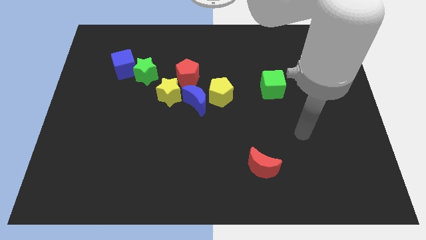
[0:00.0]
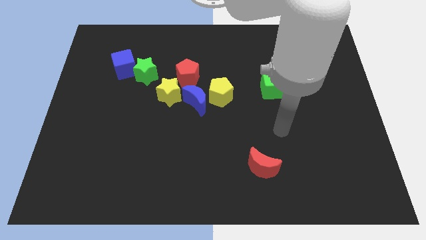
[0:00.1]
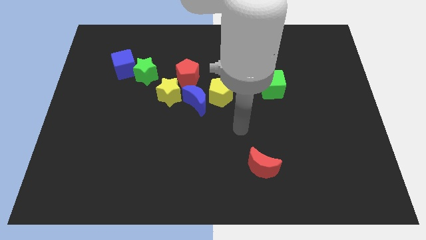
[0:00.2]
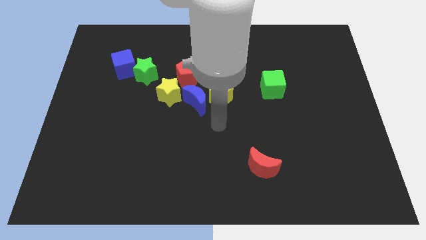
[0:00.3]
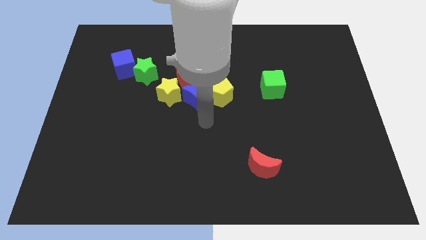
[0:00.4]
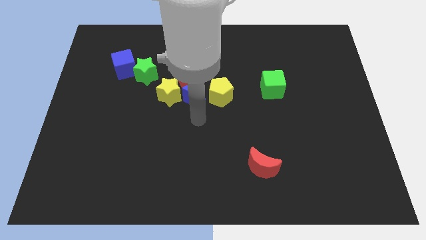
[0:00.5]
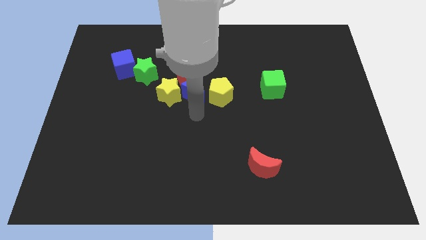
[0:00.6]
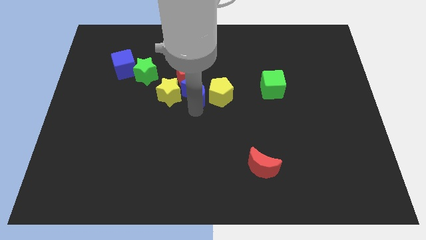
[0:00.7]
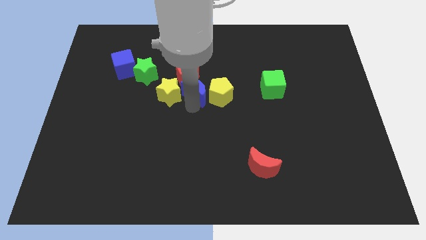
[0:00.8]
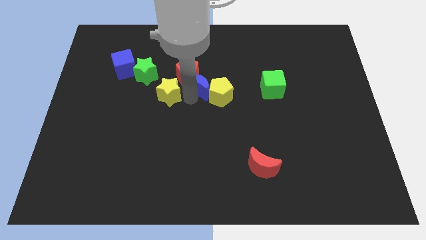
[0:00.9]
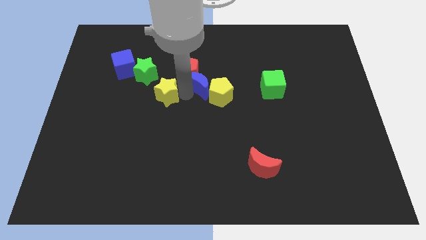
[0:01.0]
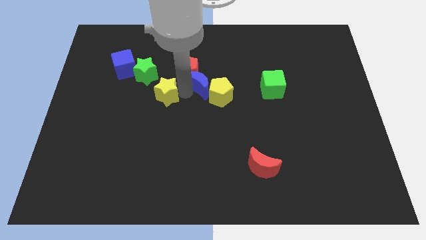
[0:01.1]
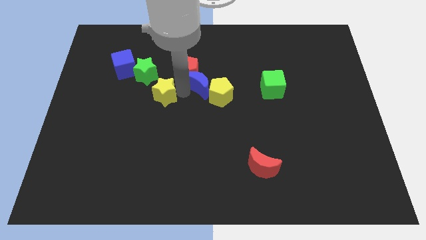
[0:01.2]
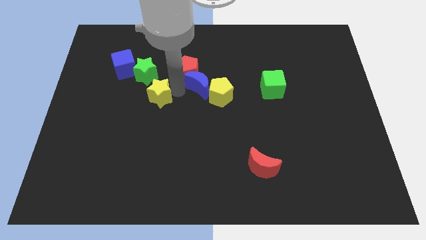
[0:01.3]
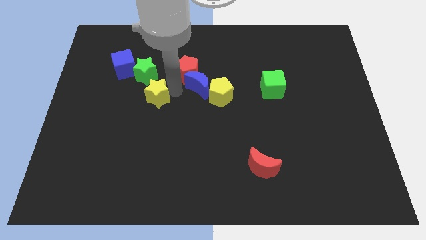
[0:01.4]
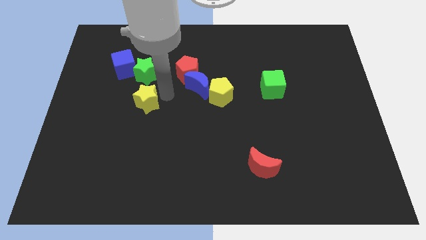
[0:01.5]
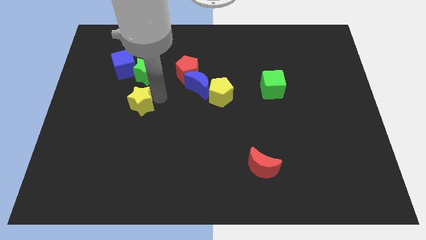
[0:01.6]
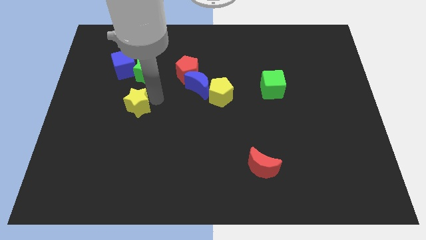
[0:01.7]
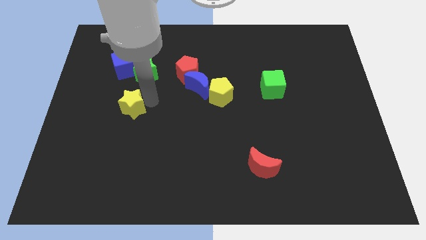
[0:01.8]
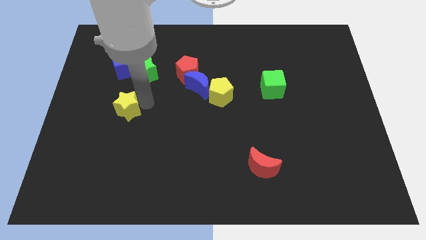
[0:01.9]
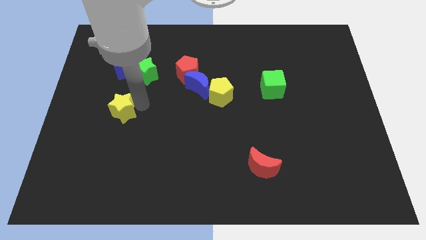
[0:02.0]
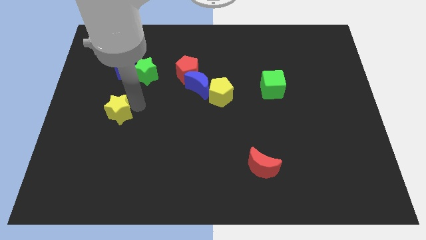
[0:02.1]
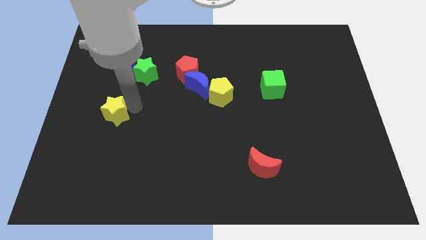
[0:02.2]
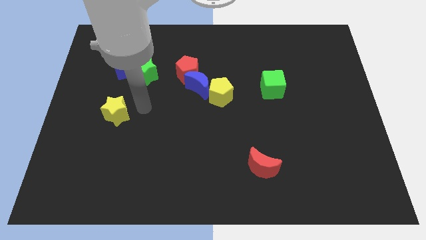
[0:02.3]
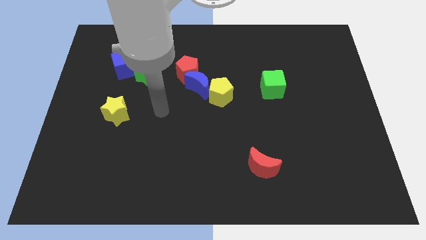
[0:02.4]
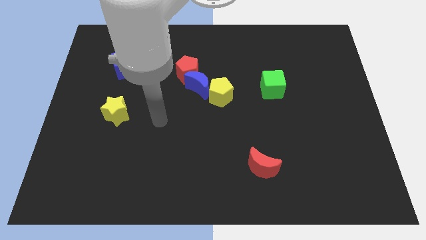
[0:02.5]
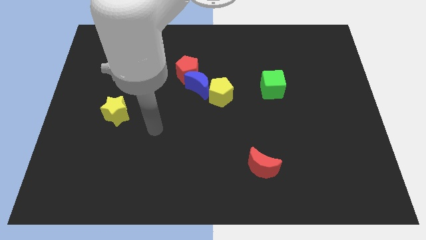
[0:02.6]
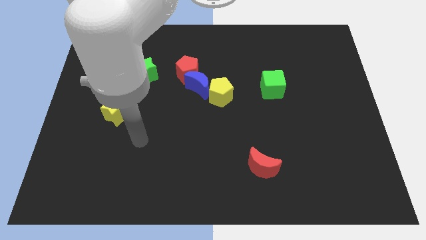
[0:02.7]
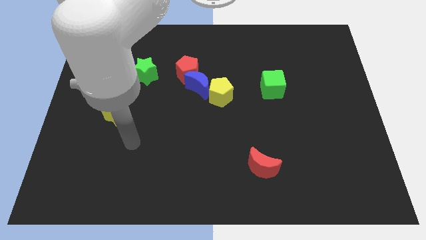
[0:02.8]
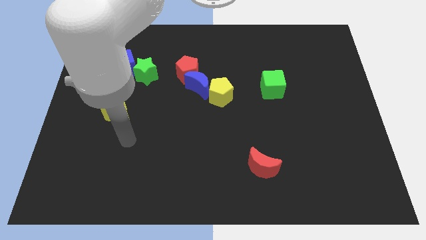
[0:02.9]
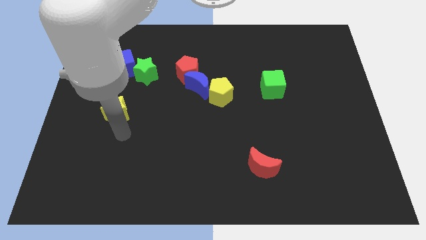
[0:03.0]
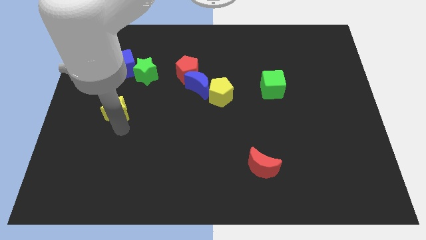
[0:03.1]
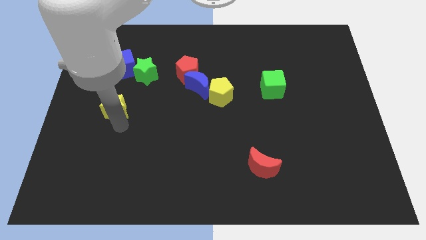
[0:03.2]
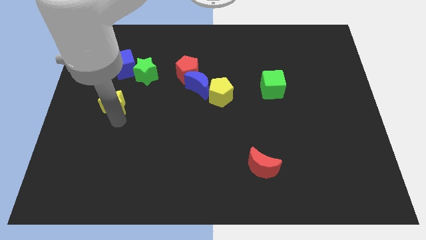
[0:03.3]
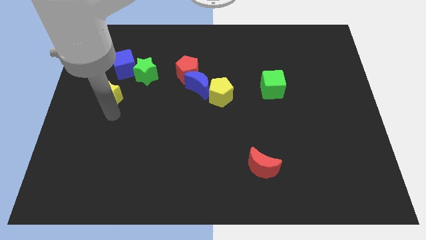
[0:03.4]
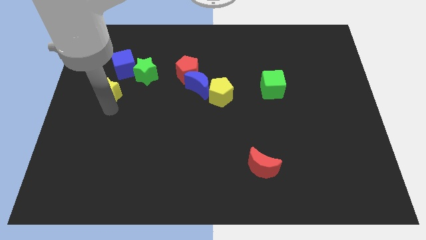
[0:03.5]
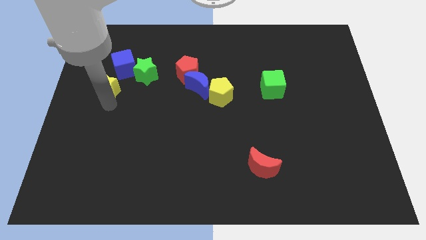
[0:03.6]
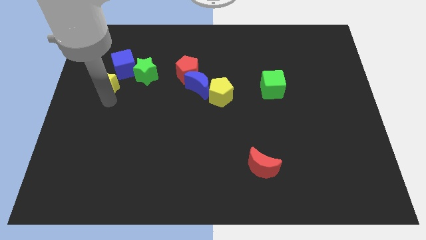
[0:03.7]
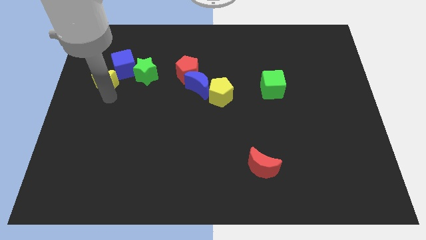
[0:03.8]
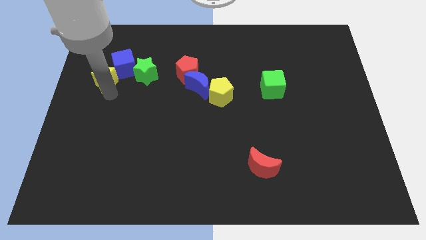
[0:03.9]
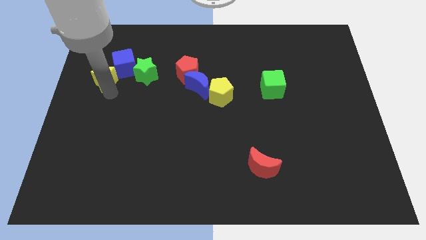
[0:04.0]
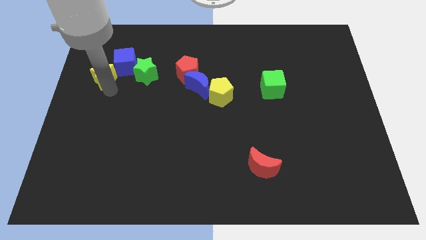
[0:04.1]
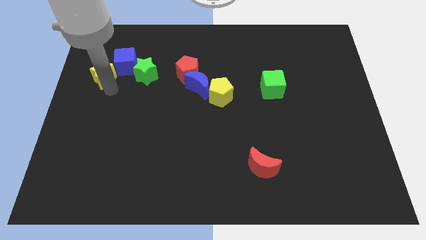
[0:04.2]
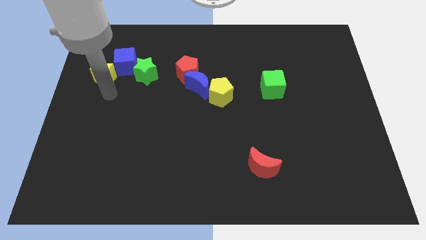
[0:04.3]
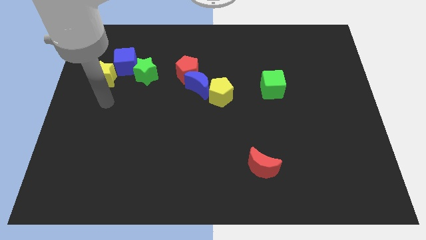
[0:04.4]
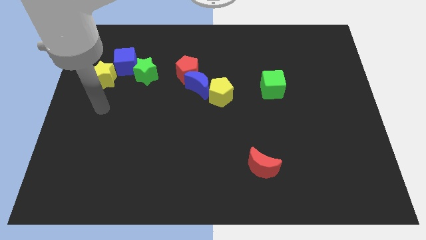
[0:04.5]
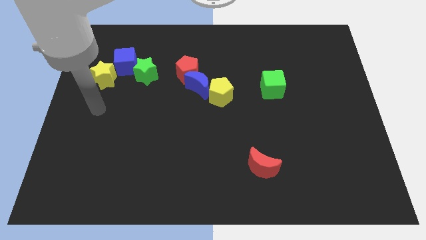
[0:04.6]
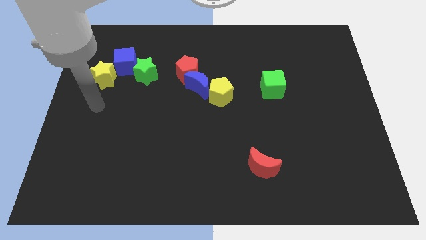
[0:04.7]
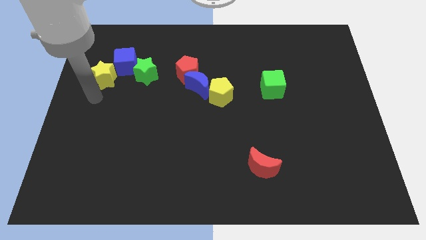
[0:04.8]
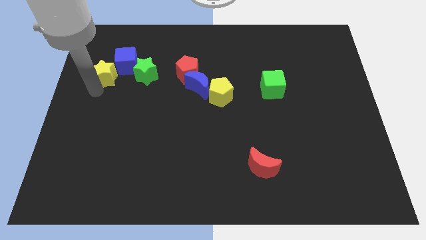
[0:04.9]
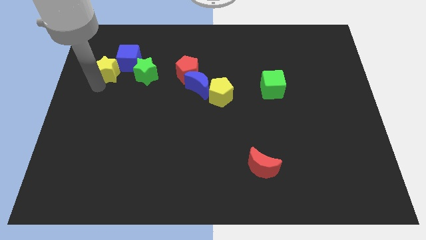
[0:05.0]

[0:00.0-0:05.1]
slide the yellow star next to the blue cube

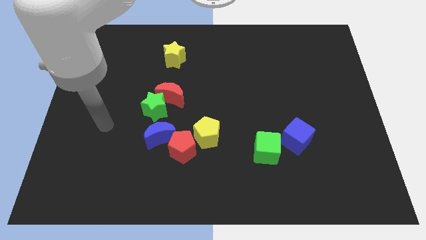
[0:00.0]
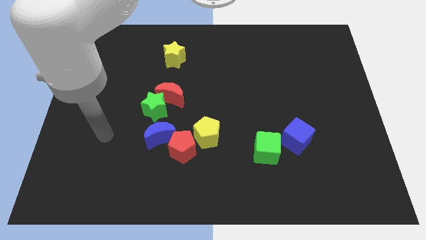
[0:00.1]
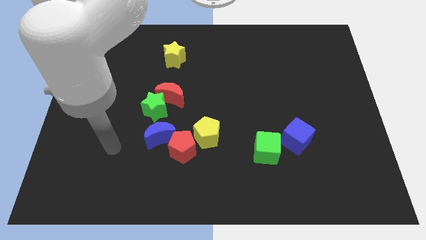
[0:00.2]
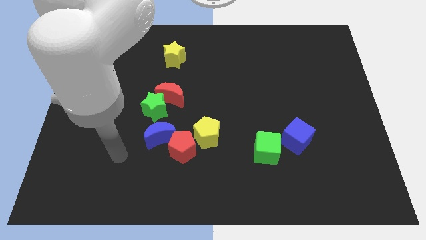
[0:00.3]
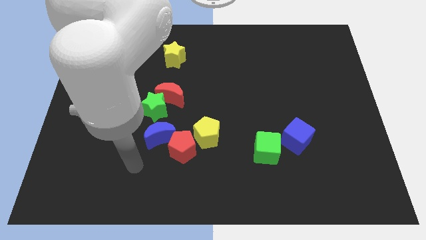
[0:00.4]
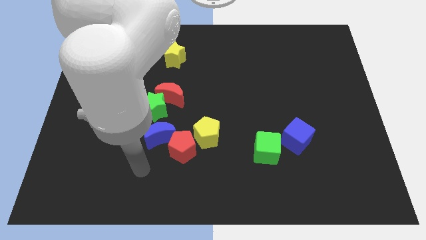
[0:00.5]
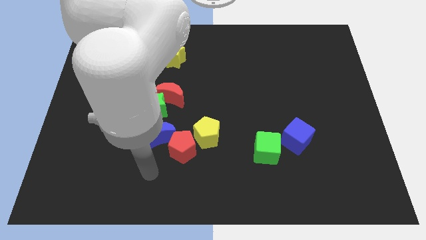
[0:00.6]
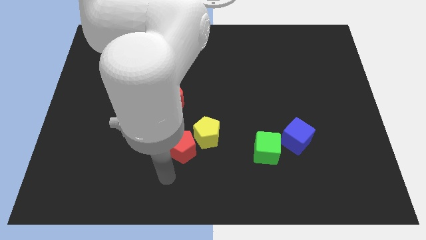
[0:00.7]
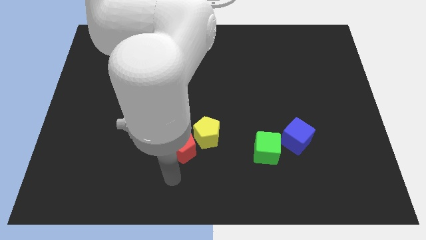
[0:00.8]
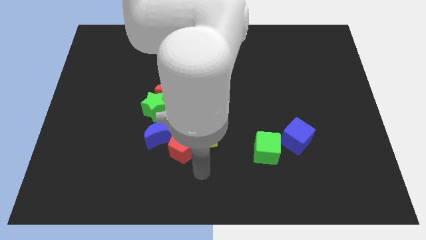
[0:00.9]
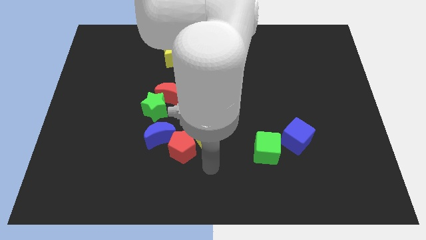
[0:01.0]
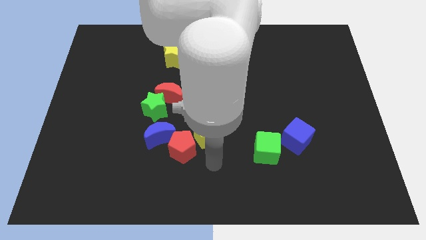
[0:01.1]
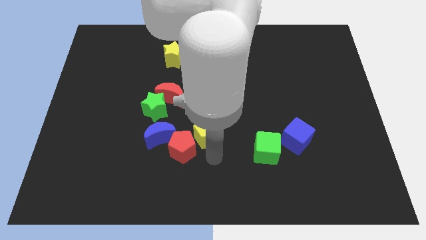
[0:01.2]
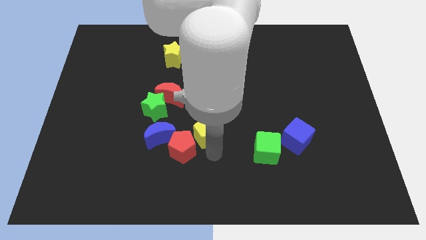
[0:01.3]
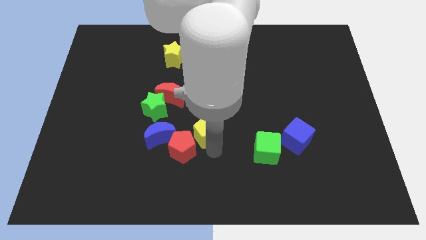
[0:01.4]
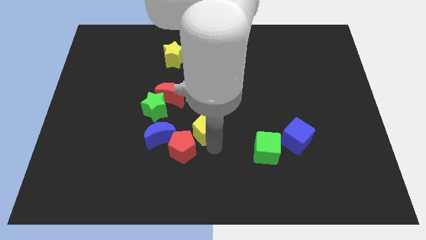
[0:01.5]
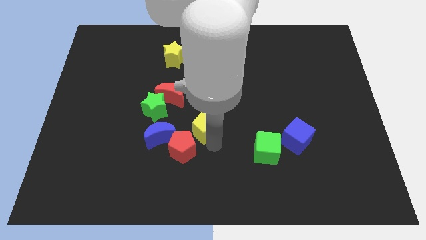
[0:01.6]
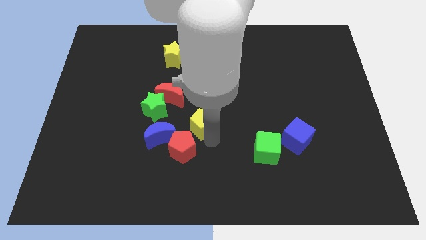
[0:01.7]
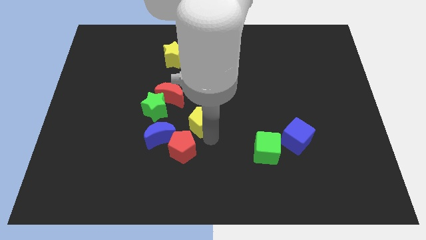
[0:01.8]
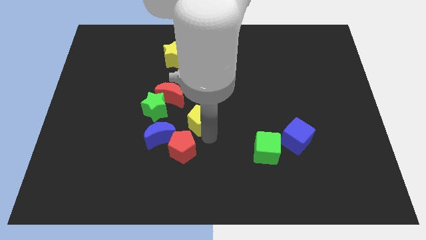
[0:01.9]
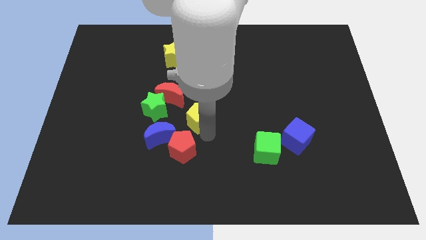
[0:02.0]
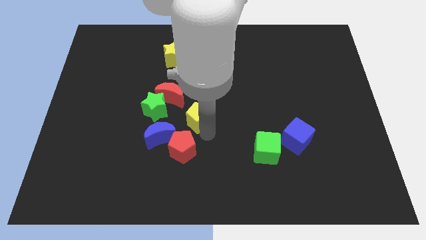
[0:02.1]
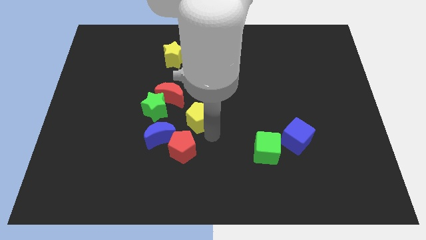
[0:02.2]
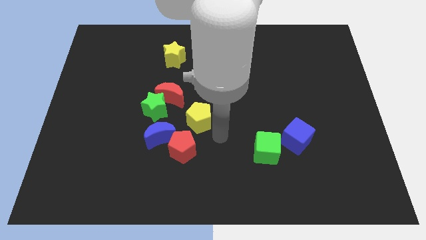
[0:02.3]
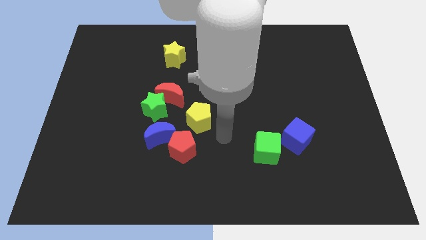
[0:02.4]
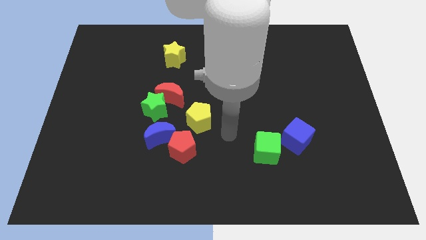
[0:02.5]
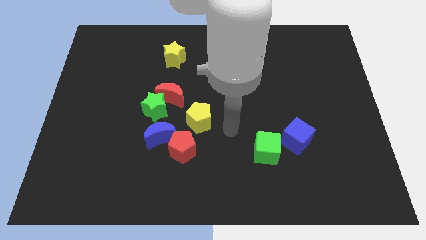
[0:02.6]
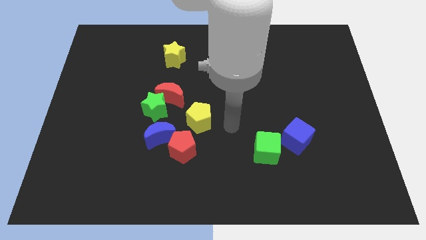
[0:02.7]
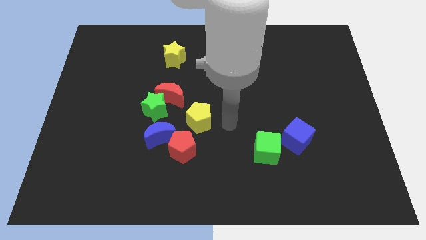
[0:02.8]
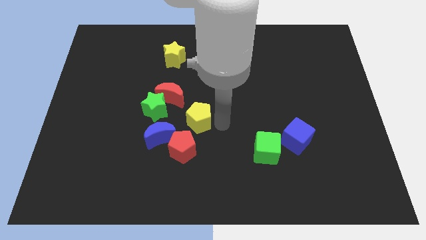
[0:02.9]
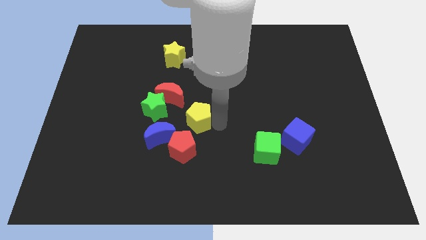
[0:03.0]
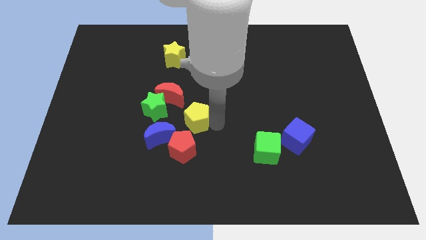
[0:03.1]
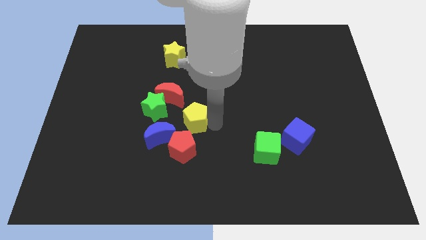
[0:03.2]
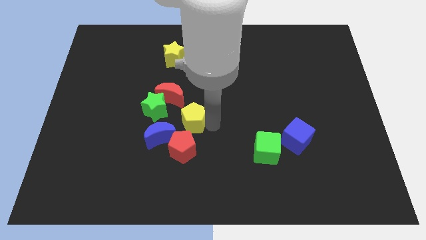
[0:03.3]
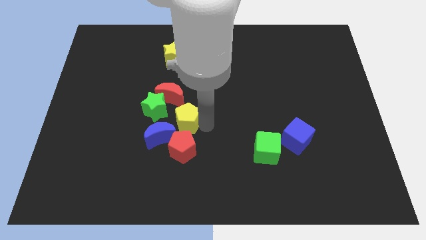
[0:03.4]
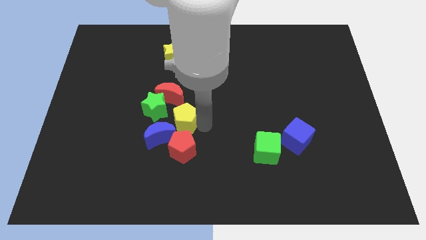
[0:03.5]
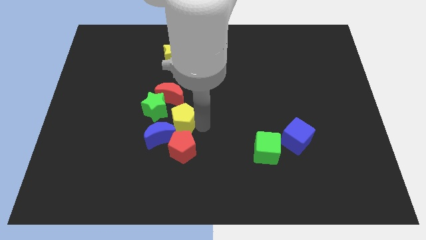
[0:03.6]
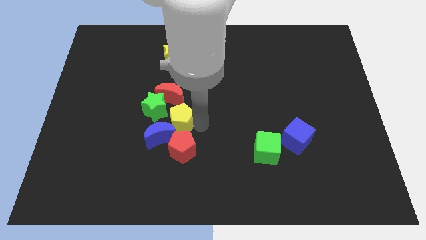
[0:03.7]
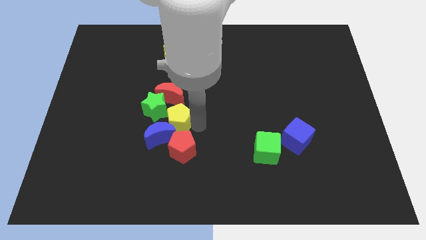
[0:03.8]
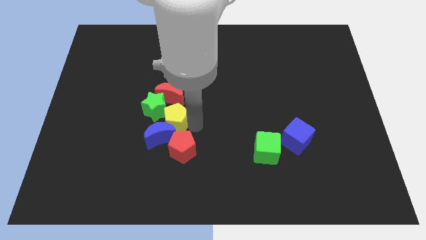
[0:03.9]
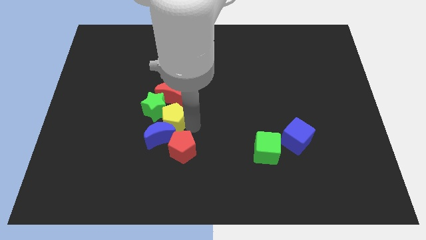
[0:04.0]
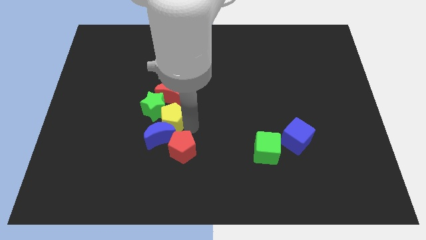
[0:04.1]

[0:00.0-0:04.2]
push the yellow pentagon close to the green star
